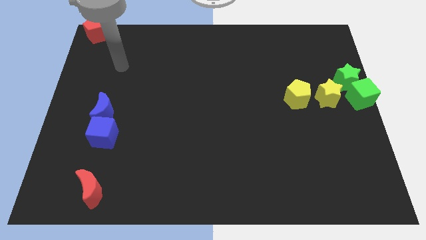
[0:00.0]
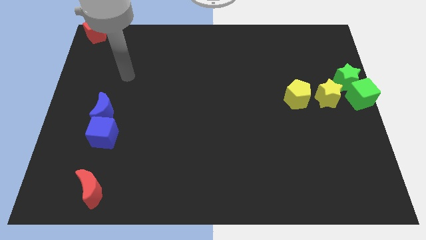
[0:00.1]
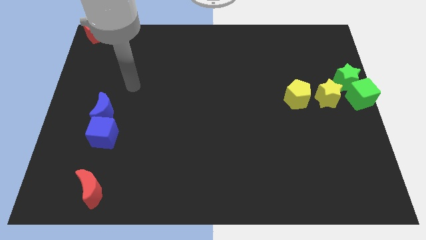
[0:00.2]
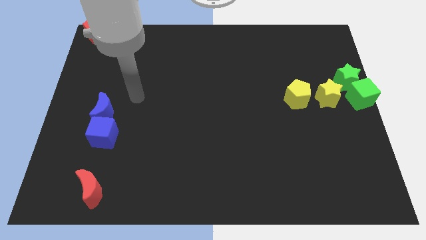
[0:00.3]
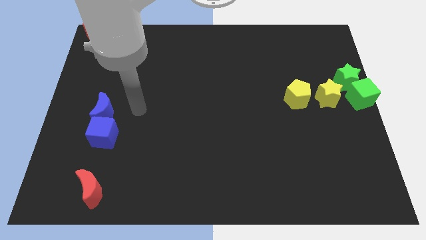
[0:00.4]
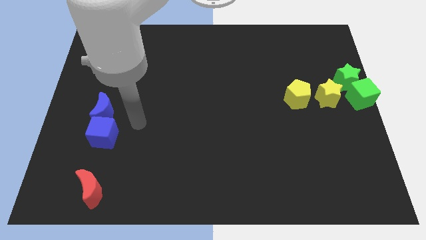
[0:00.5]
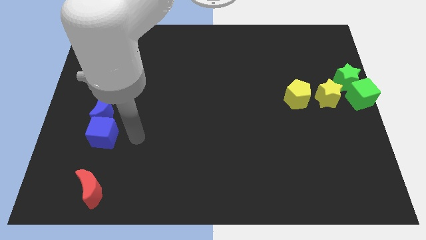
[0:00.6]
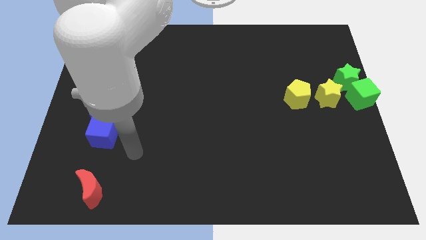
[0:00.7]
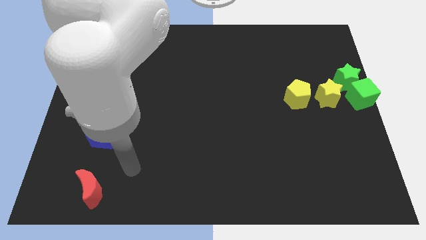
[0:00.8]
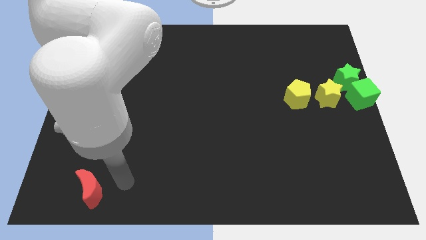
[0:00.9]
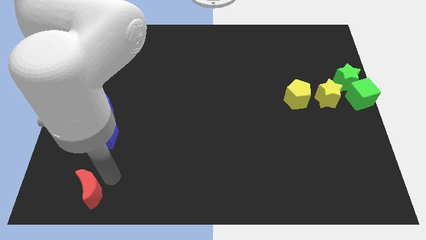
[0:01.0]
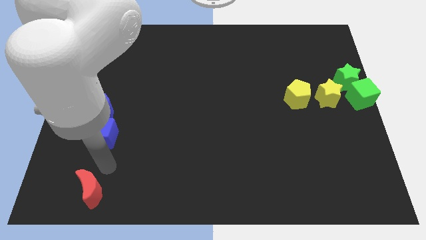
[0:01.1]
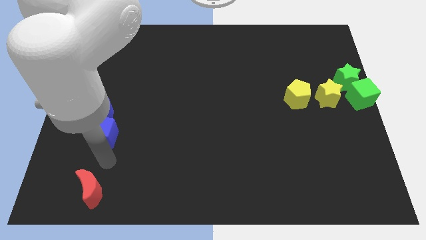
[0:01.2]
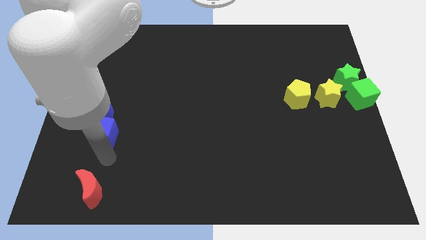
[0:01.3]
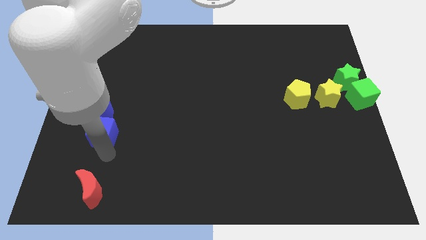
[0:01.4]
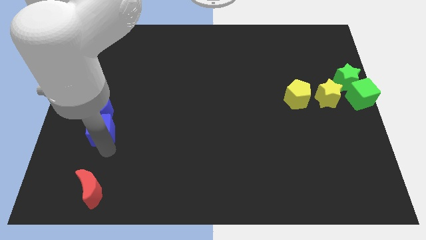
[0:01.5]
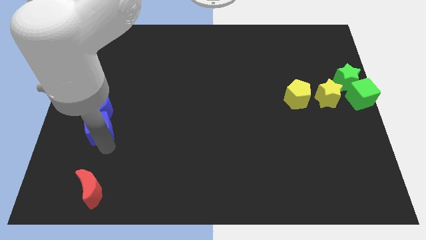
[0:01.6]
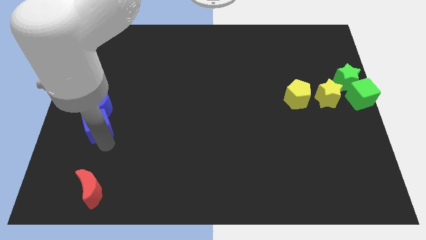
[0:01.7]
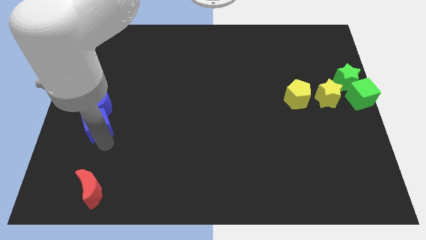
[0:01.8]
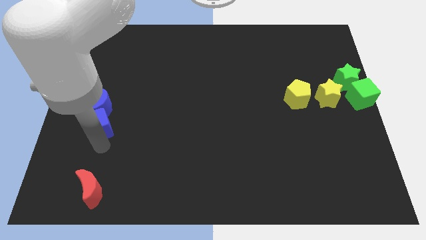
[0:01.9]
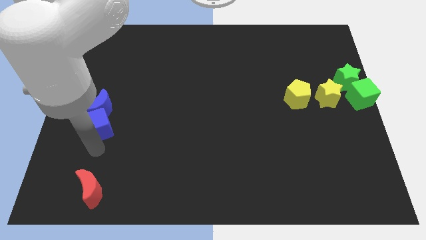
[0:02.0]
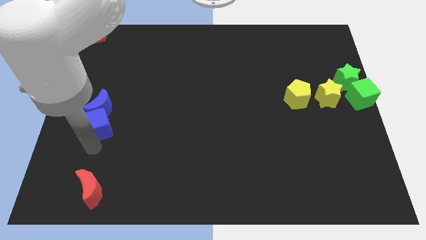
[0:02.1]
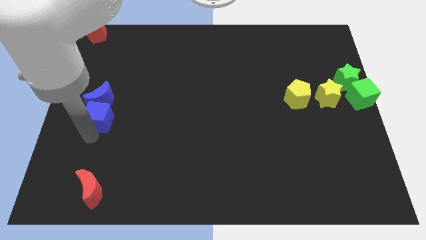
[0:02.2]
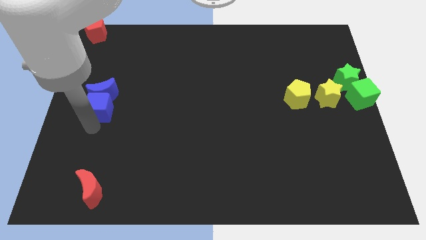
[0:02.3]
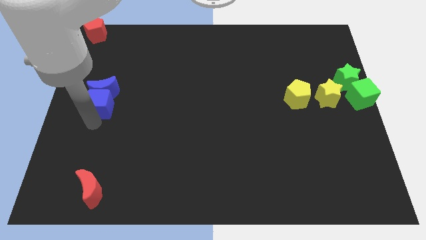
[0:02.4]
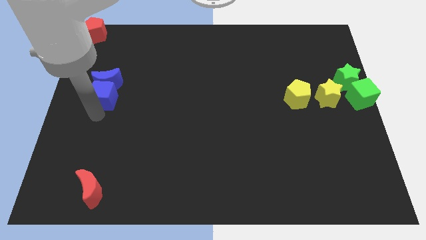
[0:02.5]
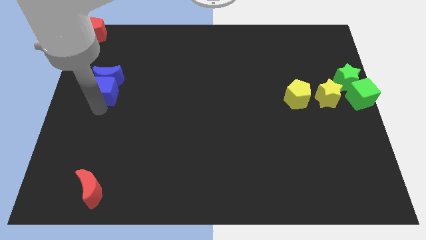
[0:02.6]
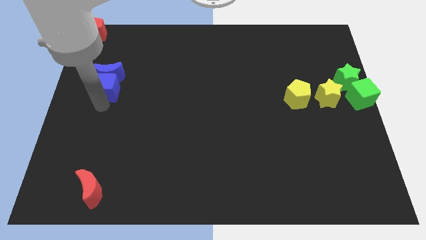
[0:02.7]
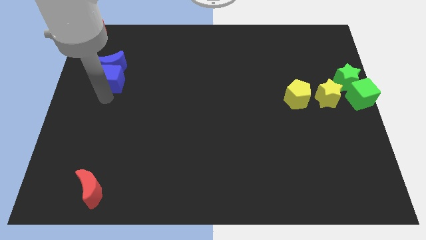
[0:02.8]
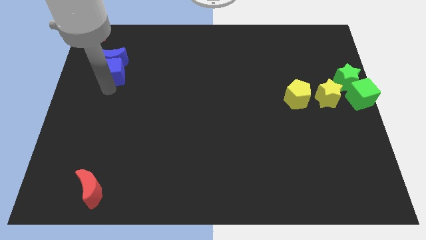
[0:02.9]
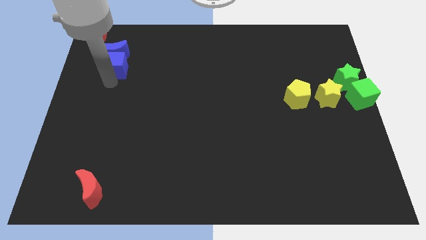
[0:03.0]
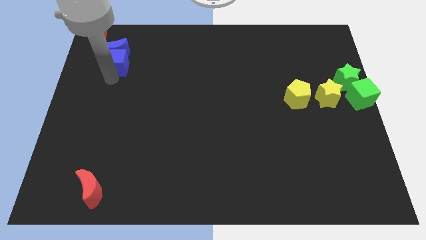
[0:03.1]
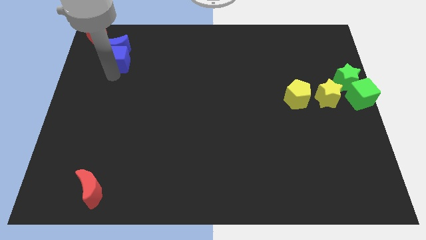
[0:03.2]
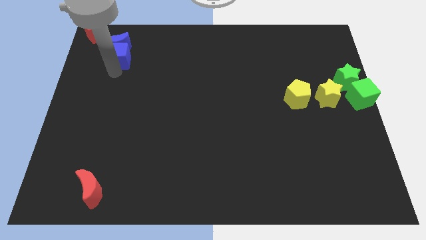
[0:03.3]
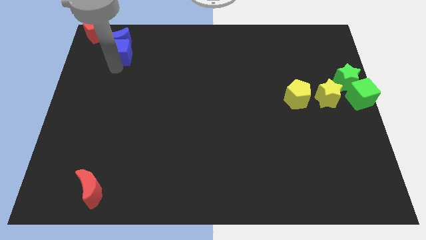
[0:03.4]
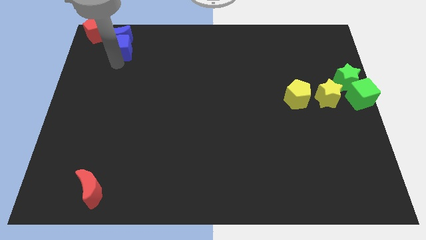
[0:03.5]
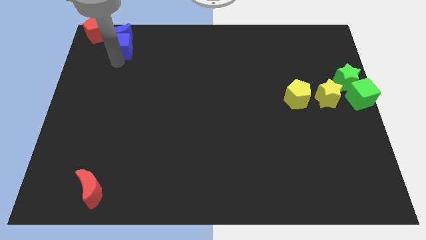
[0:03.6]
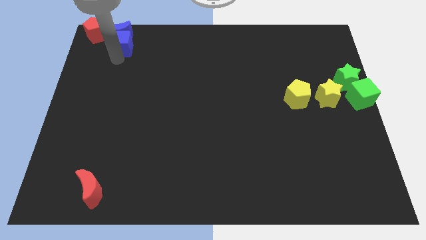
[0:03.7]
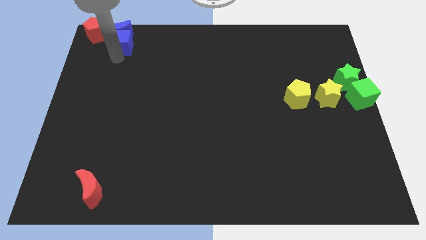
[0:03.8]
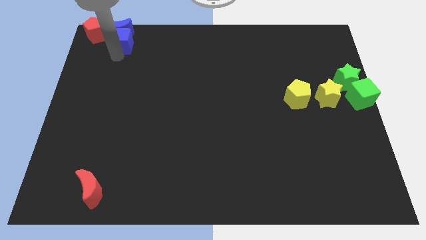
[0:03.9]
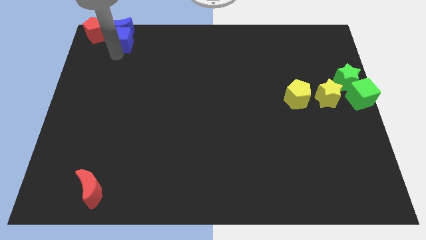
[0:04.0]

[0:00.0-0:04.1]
push blue crescent along with blue block to the right of the red pentagon

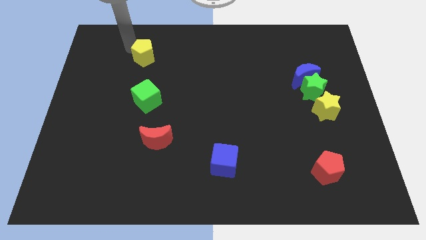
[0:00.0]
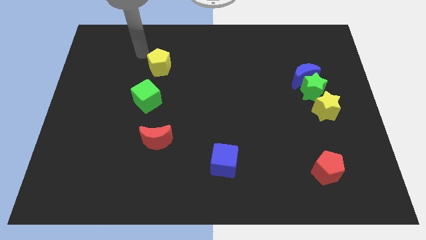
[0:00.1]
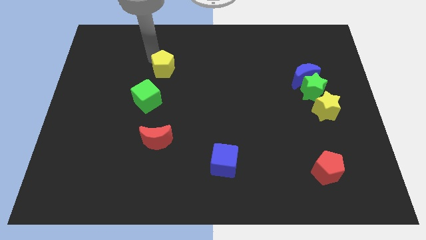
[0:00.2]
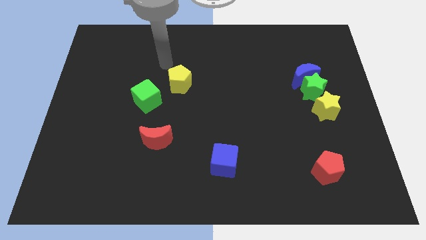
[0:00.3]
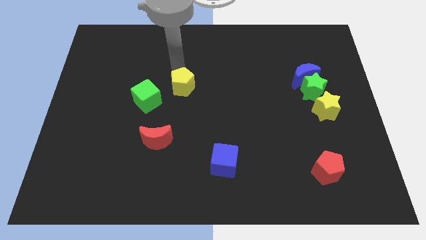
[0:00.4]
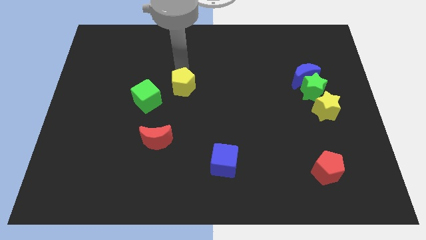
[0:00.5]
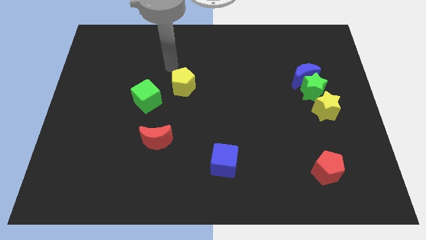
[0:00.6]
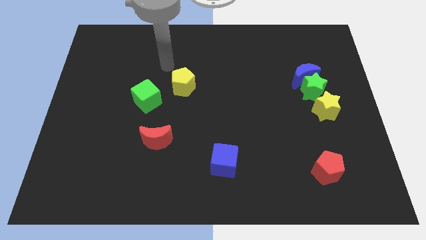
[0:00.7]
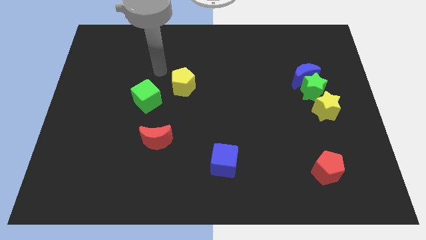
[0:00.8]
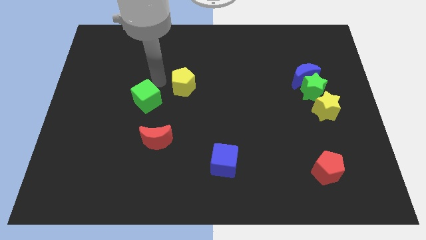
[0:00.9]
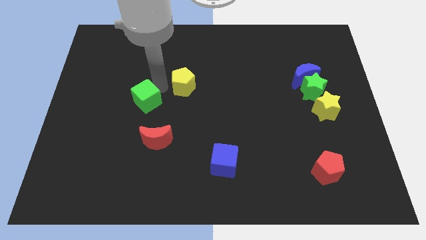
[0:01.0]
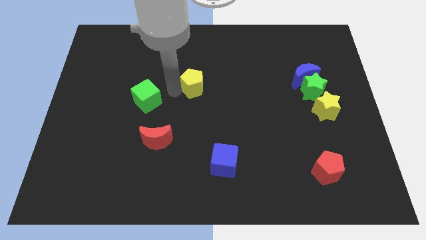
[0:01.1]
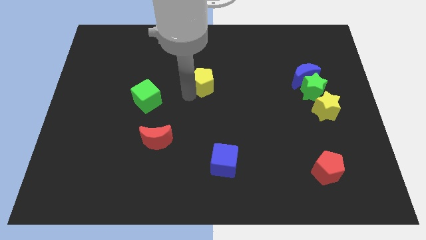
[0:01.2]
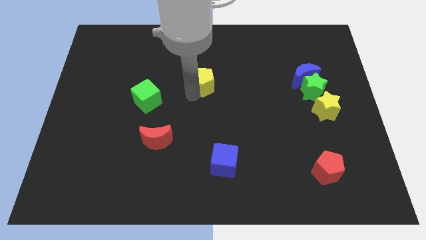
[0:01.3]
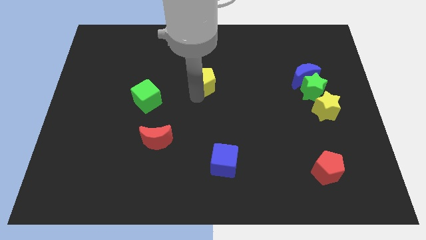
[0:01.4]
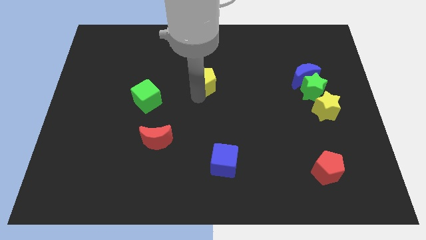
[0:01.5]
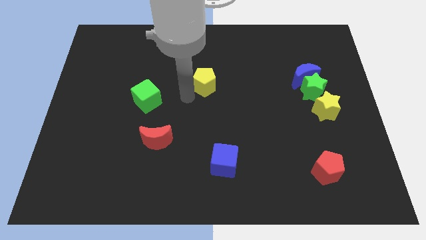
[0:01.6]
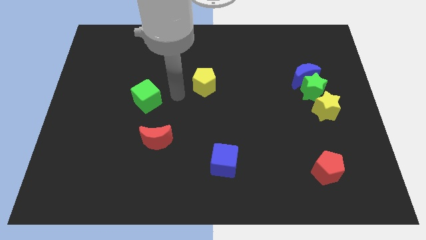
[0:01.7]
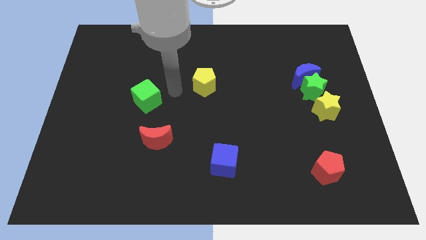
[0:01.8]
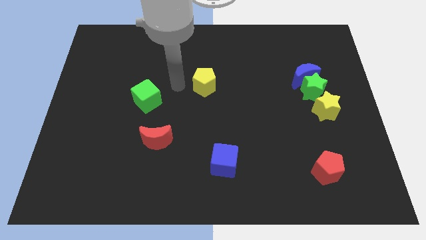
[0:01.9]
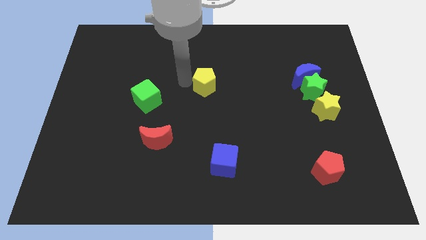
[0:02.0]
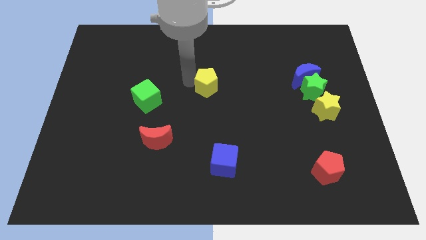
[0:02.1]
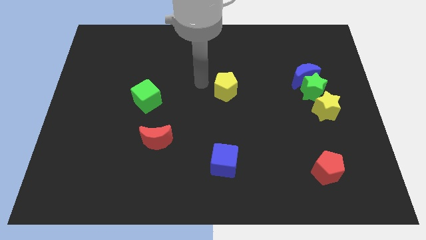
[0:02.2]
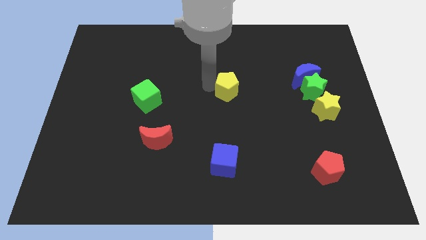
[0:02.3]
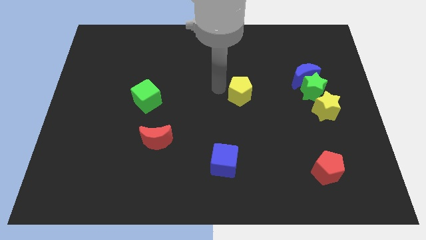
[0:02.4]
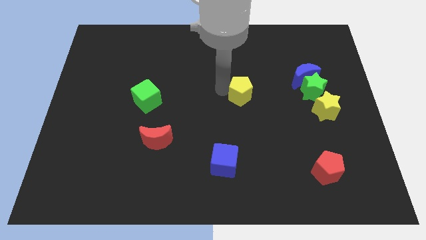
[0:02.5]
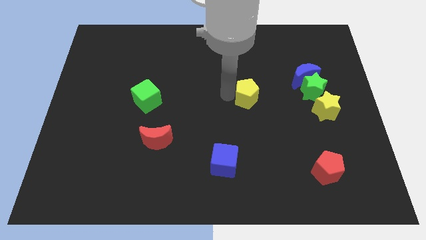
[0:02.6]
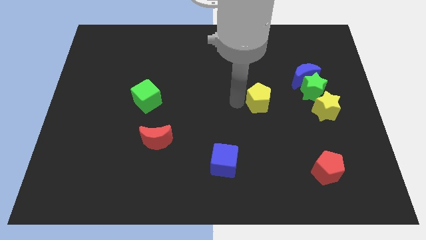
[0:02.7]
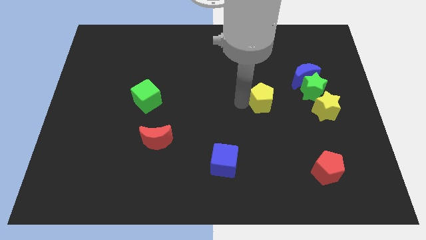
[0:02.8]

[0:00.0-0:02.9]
place yellow pentagon parallel to green star

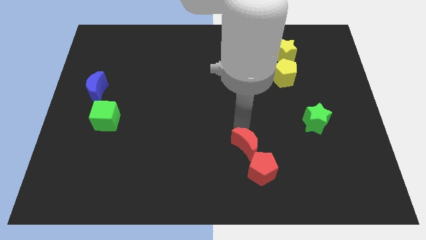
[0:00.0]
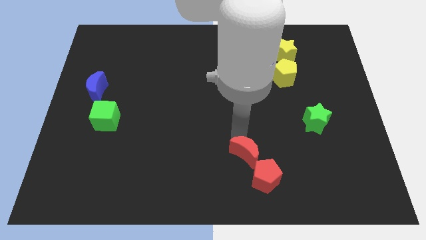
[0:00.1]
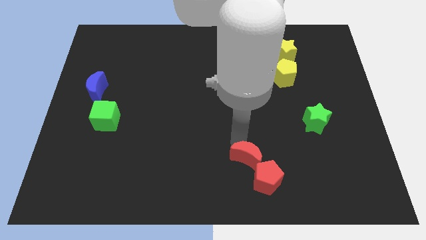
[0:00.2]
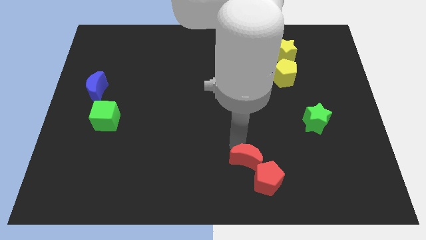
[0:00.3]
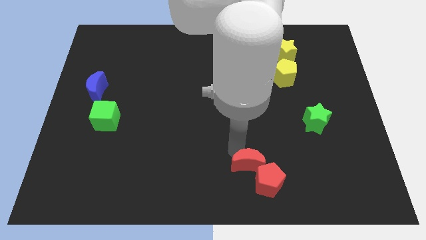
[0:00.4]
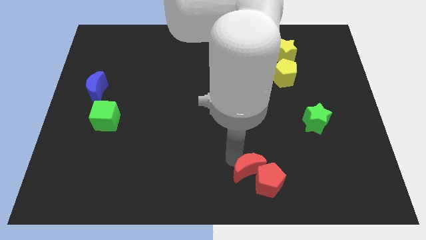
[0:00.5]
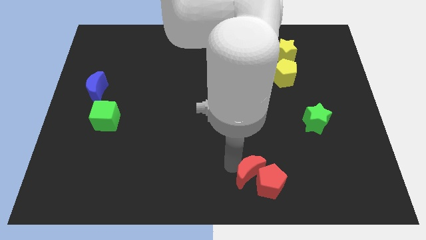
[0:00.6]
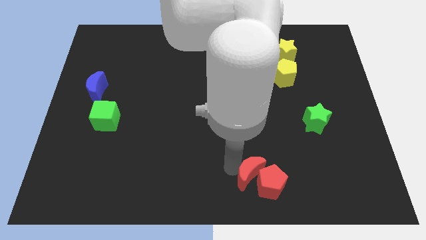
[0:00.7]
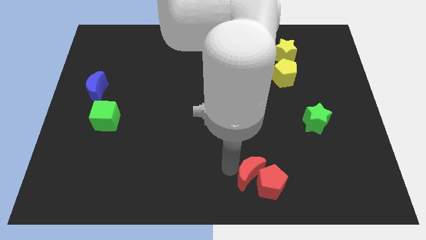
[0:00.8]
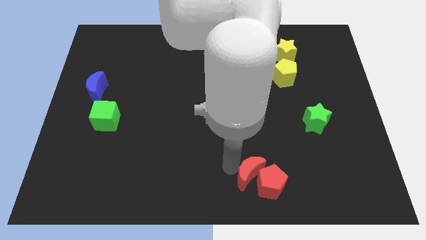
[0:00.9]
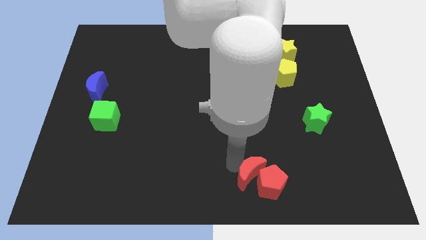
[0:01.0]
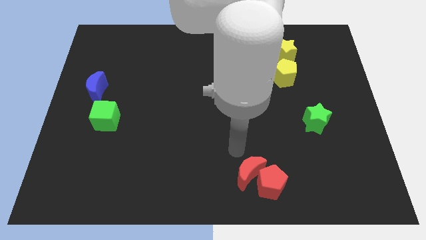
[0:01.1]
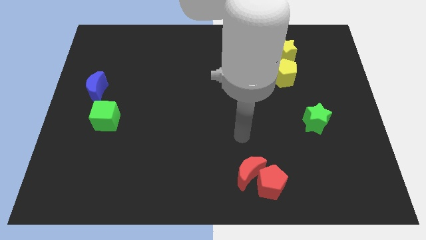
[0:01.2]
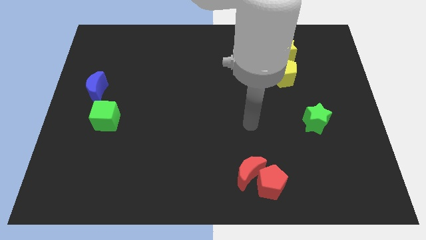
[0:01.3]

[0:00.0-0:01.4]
push both the red blocks slightly to the bottom side of the board

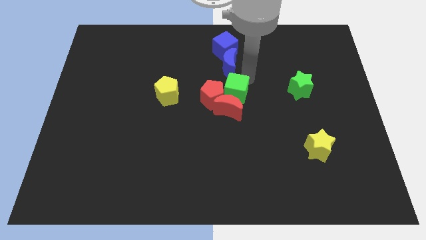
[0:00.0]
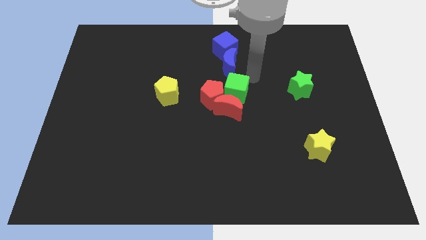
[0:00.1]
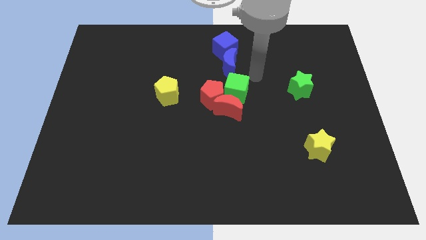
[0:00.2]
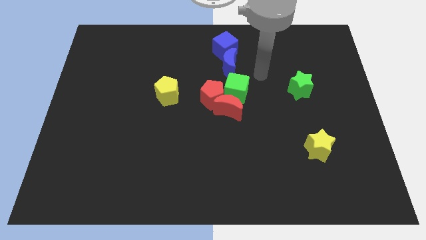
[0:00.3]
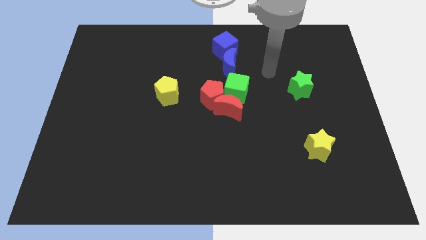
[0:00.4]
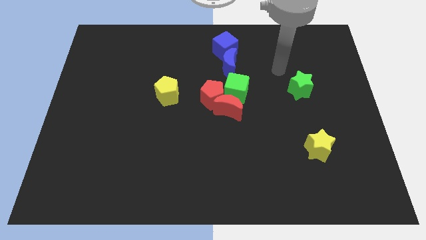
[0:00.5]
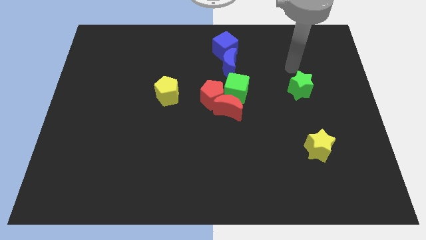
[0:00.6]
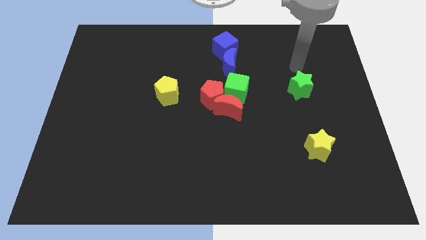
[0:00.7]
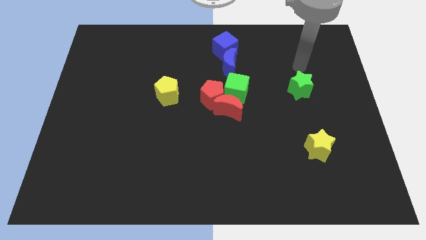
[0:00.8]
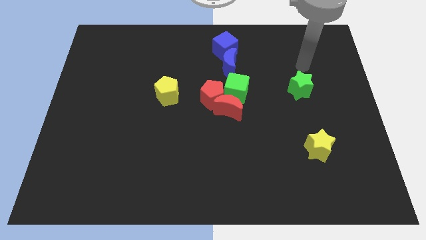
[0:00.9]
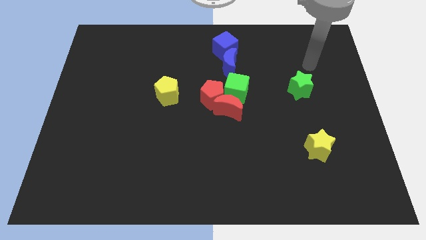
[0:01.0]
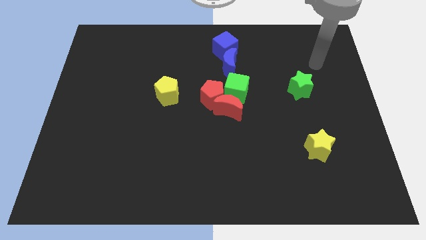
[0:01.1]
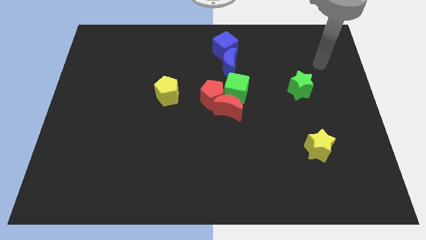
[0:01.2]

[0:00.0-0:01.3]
move the hand on the top right side of the green star
